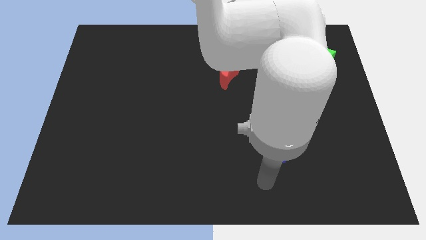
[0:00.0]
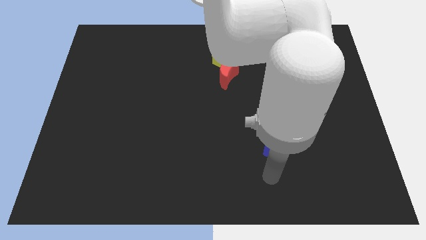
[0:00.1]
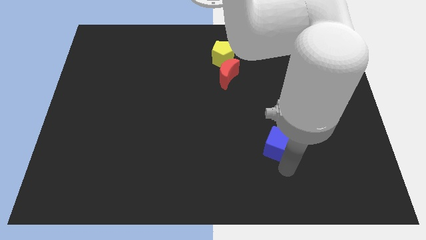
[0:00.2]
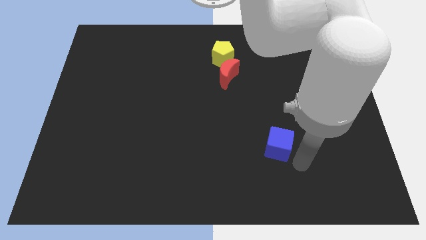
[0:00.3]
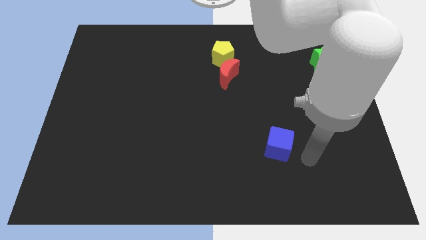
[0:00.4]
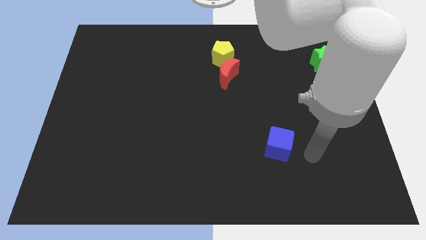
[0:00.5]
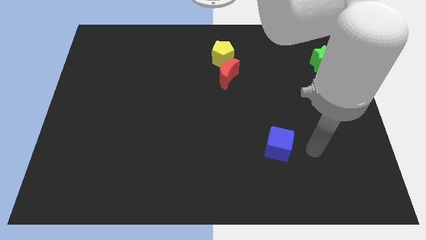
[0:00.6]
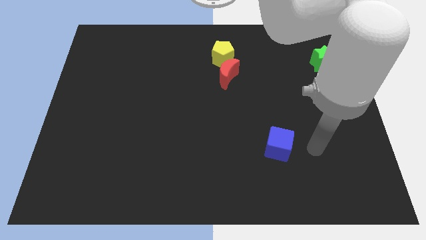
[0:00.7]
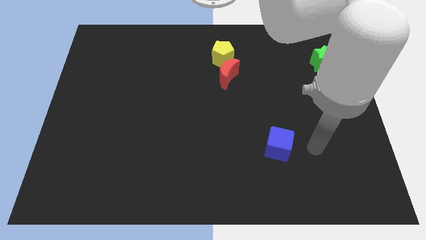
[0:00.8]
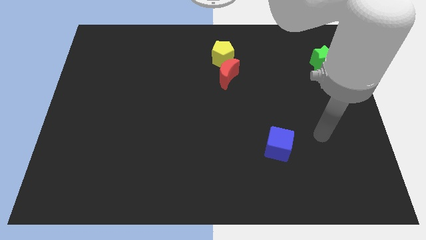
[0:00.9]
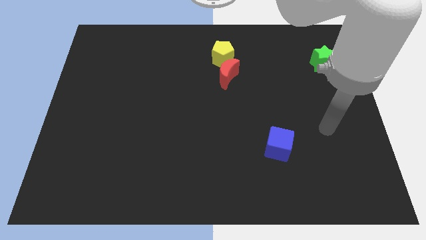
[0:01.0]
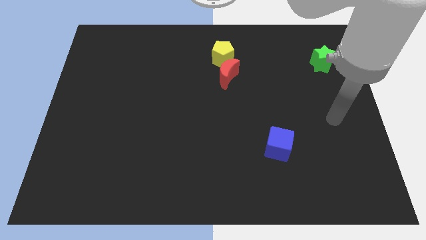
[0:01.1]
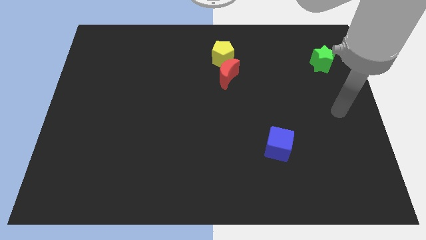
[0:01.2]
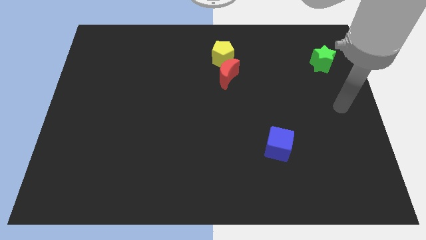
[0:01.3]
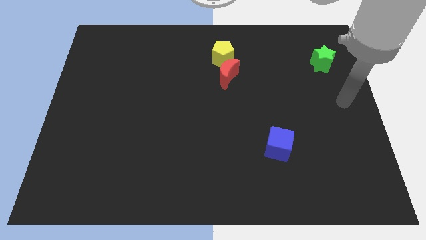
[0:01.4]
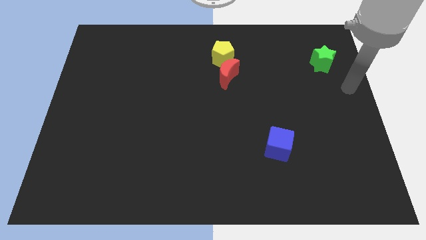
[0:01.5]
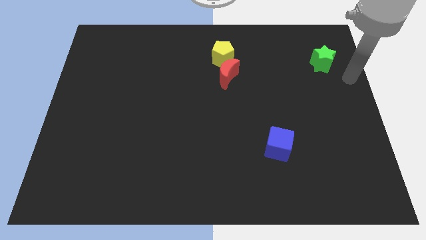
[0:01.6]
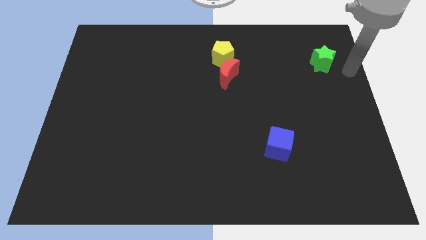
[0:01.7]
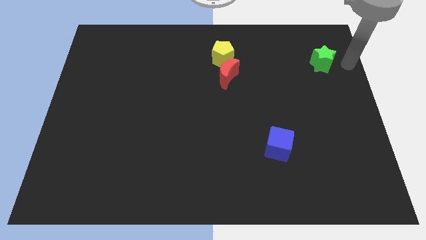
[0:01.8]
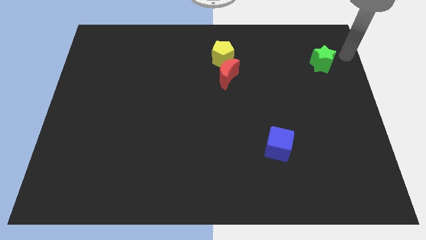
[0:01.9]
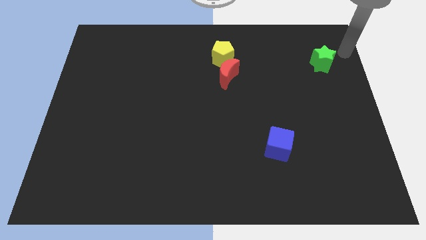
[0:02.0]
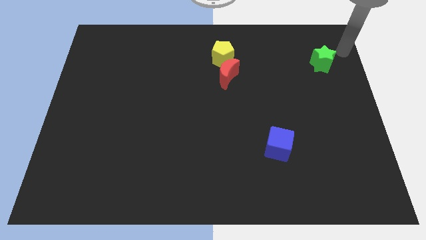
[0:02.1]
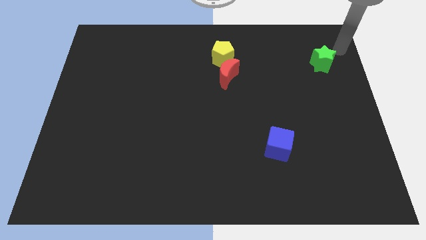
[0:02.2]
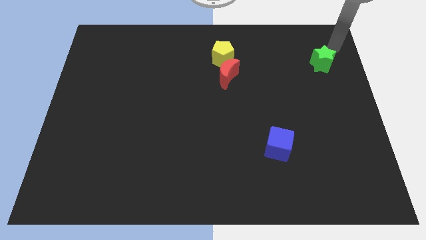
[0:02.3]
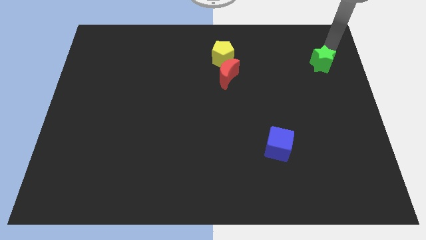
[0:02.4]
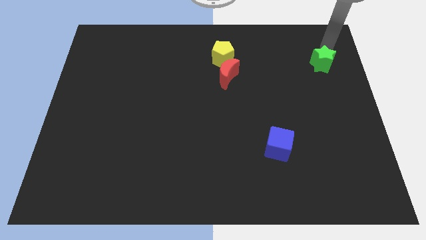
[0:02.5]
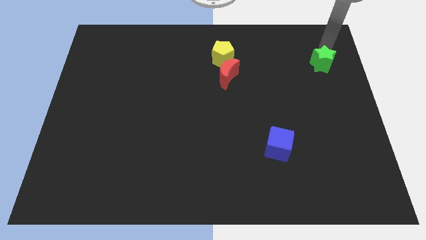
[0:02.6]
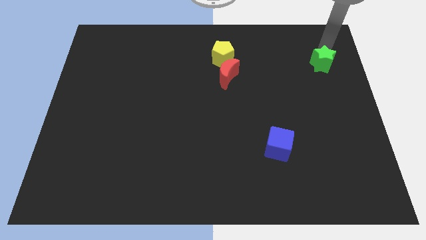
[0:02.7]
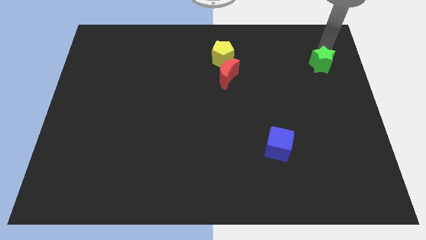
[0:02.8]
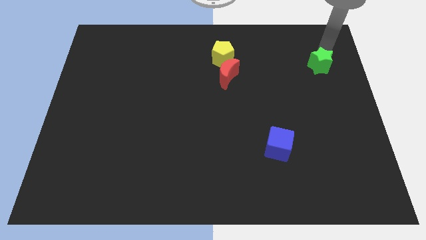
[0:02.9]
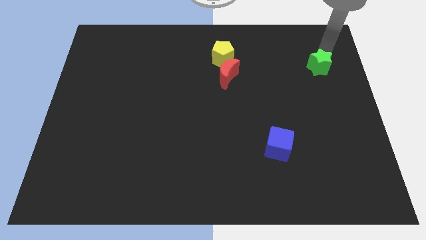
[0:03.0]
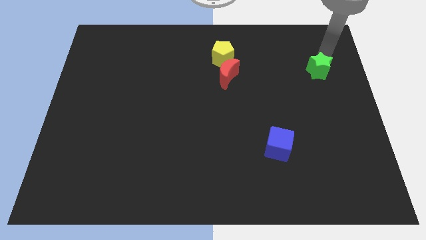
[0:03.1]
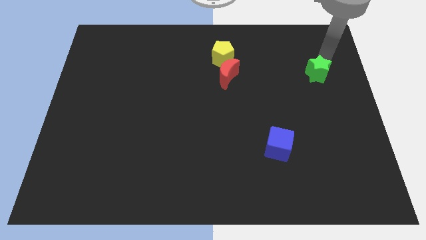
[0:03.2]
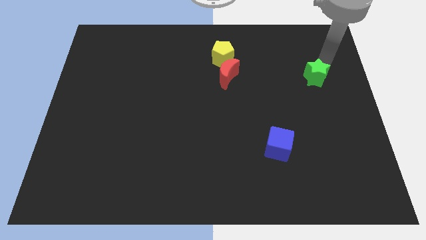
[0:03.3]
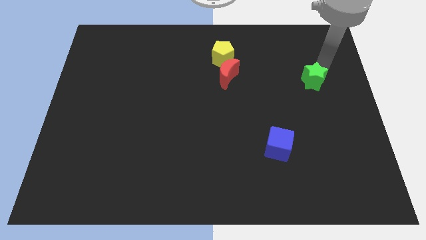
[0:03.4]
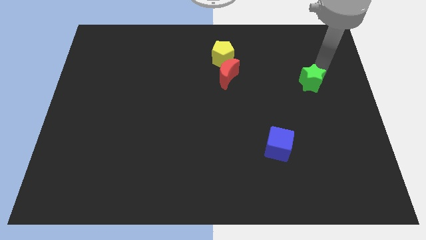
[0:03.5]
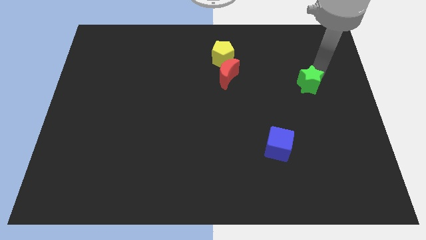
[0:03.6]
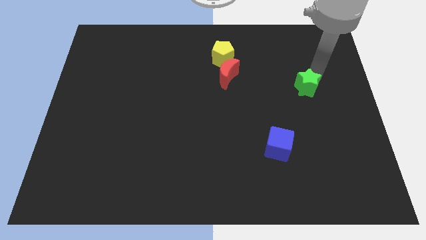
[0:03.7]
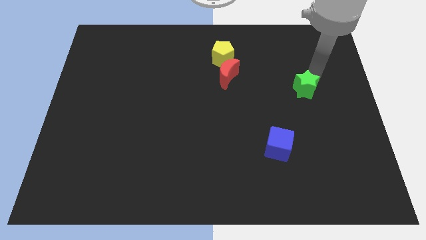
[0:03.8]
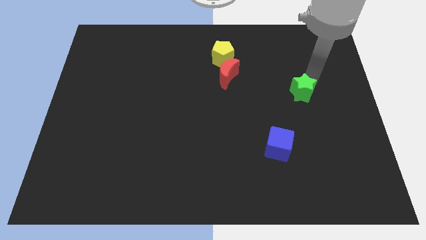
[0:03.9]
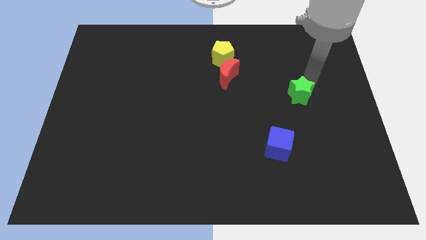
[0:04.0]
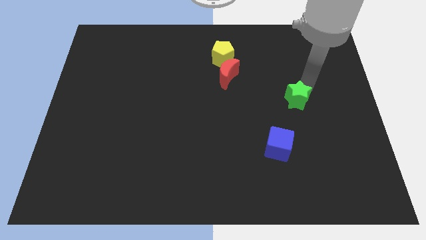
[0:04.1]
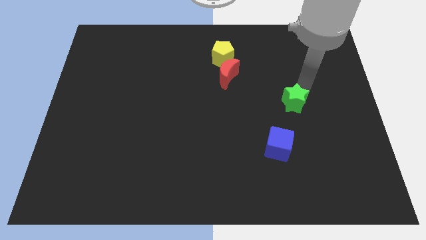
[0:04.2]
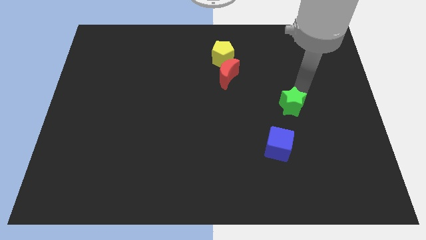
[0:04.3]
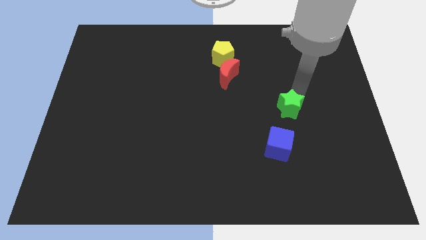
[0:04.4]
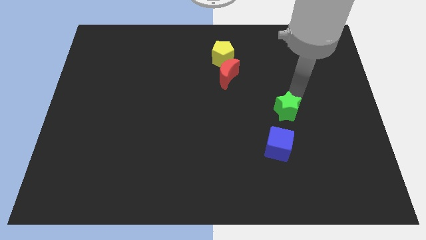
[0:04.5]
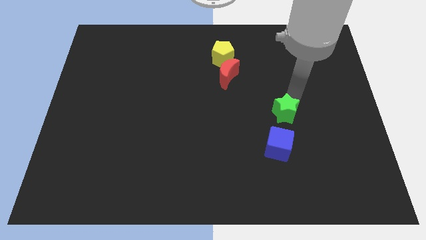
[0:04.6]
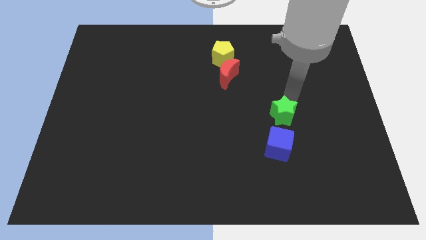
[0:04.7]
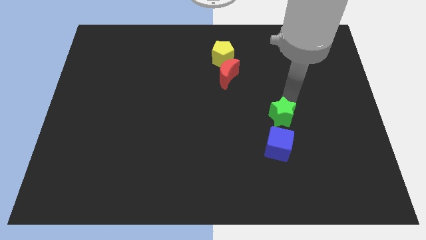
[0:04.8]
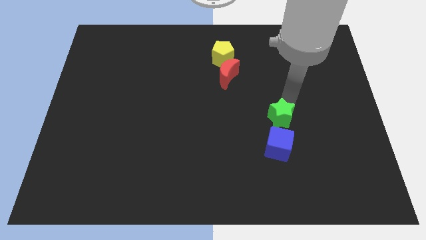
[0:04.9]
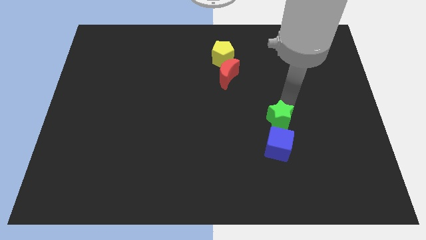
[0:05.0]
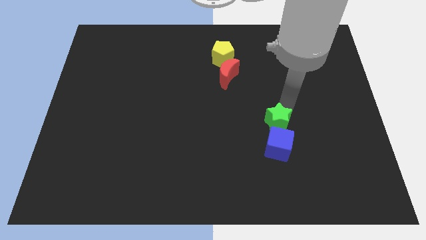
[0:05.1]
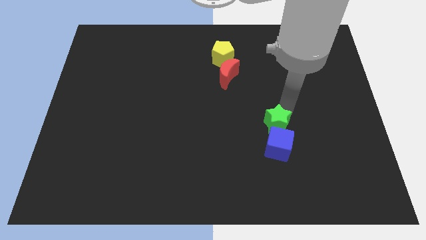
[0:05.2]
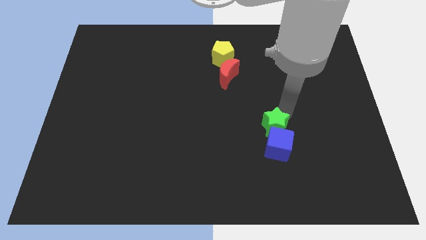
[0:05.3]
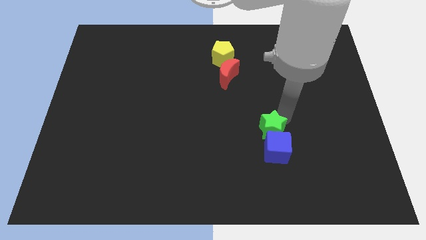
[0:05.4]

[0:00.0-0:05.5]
move the green star close to the blue block

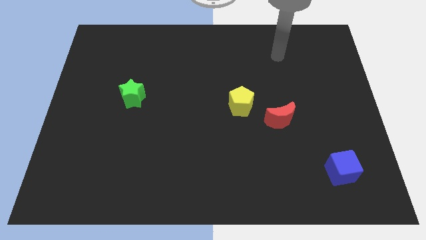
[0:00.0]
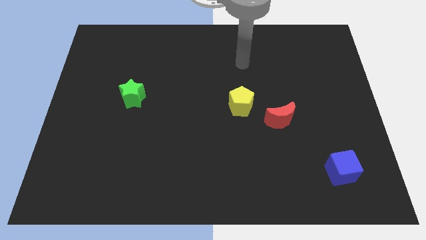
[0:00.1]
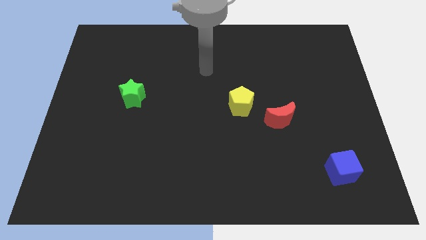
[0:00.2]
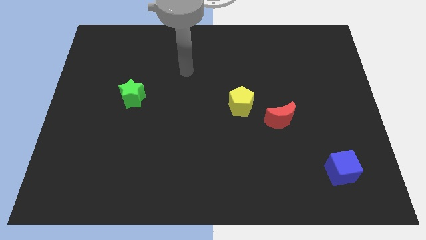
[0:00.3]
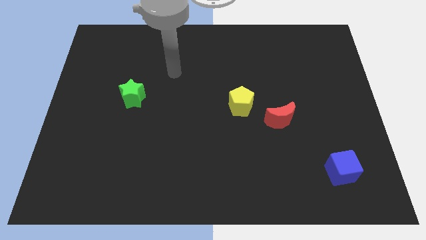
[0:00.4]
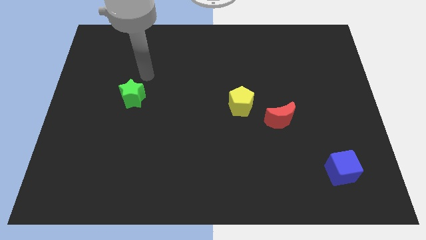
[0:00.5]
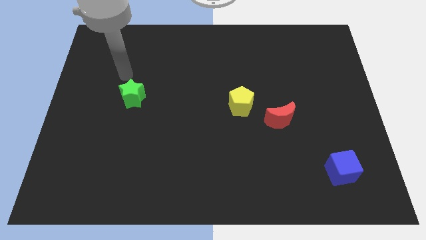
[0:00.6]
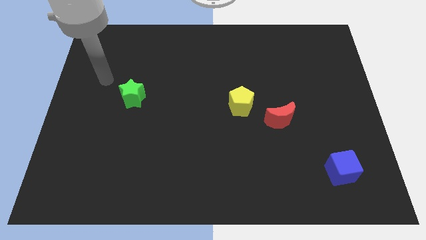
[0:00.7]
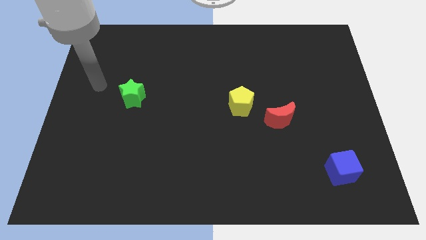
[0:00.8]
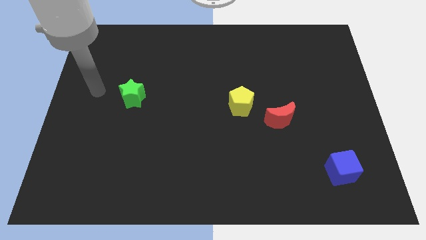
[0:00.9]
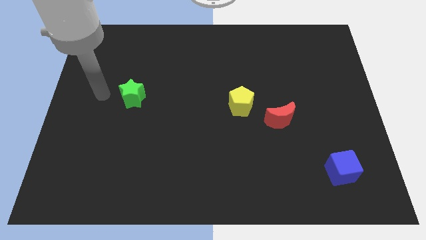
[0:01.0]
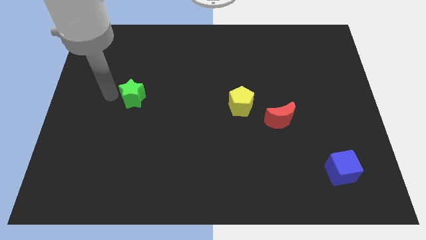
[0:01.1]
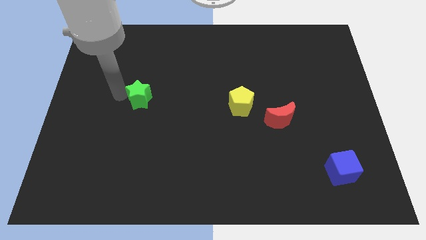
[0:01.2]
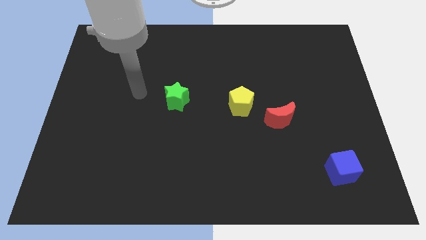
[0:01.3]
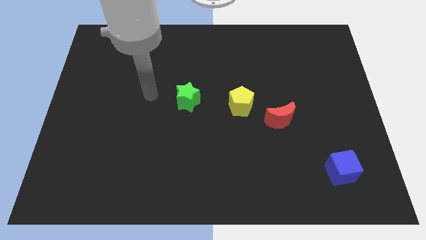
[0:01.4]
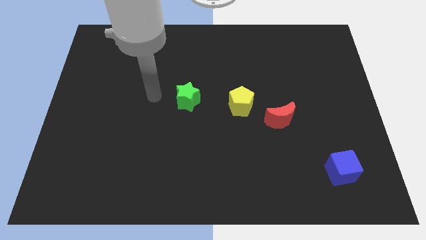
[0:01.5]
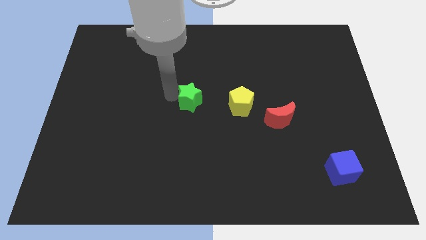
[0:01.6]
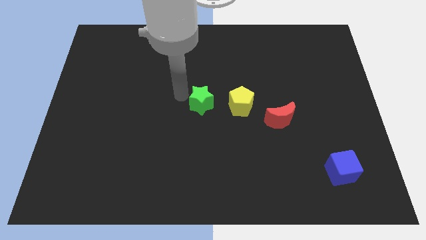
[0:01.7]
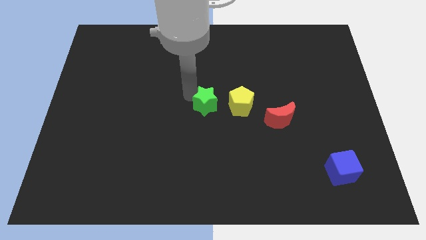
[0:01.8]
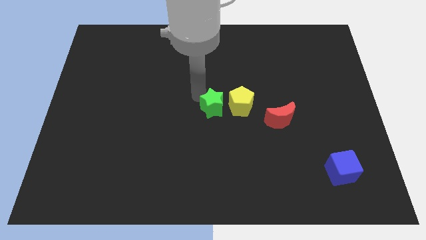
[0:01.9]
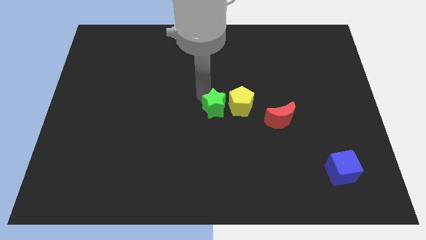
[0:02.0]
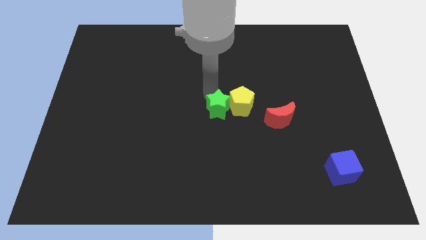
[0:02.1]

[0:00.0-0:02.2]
push the green block towards the yellow pentagon

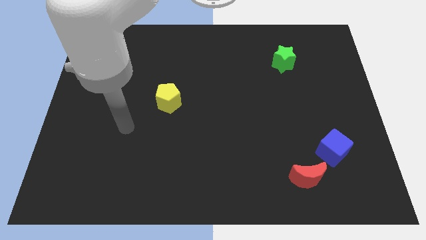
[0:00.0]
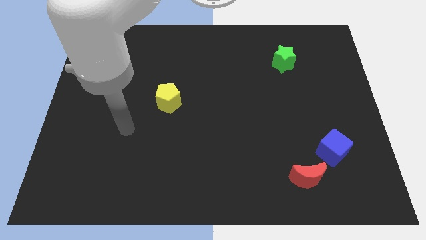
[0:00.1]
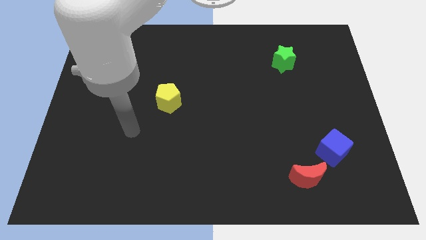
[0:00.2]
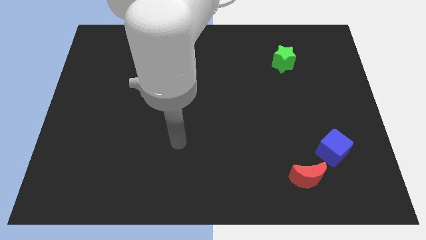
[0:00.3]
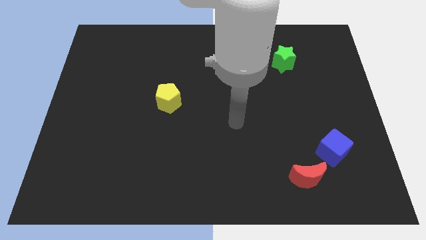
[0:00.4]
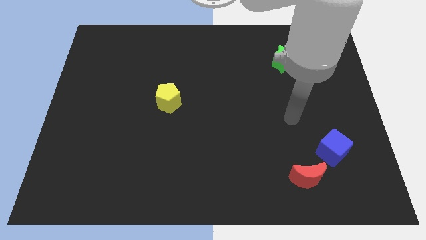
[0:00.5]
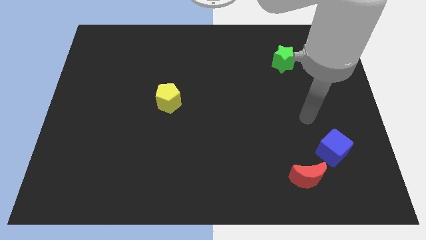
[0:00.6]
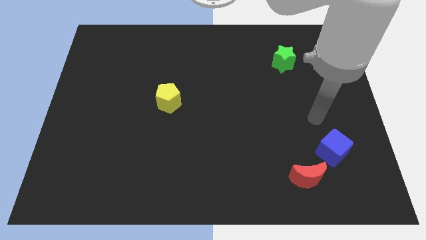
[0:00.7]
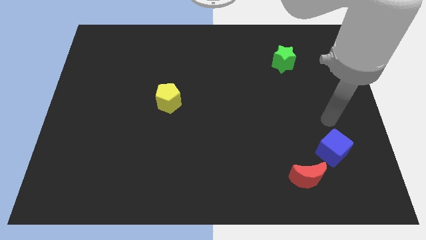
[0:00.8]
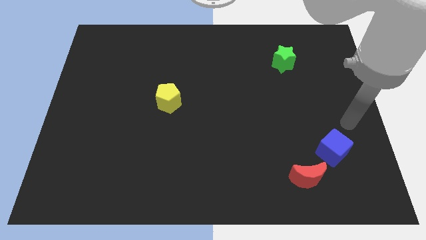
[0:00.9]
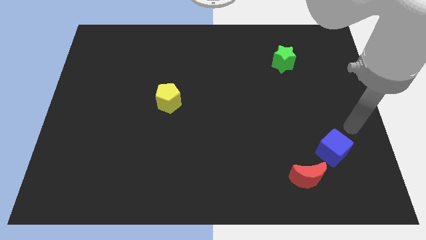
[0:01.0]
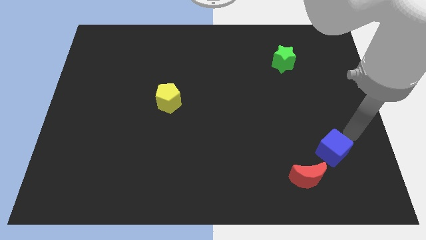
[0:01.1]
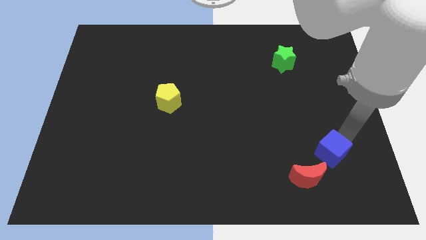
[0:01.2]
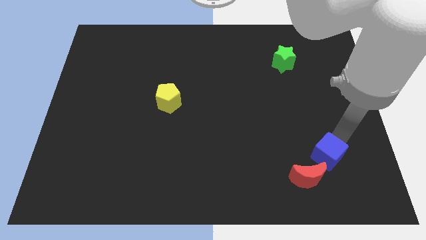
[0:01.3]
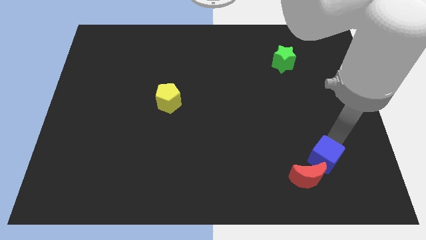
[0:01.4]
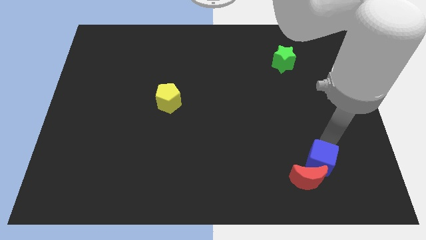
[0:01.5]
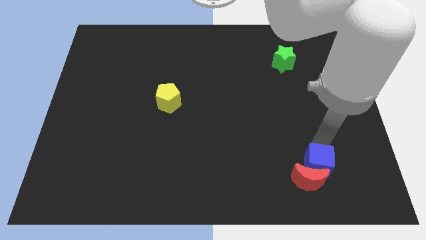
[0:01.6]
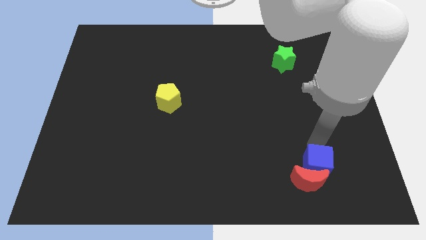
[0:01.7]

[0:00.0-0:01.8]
push the cube to the moon
